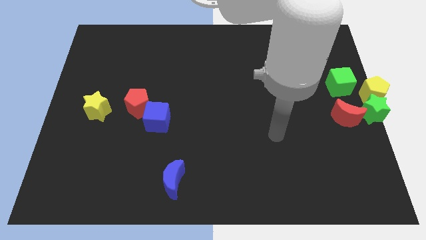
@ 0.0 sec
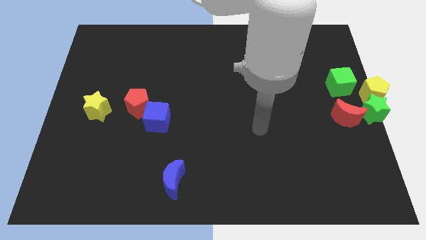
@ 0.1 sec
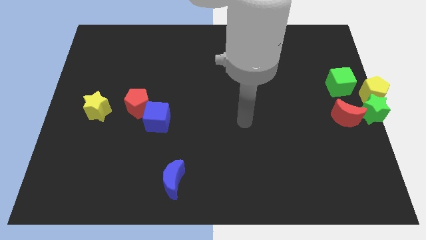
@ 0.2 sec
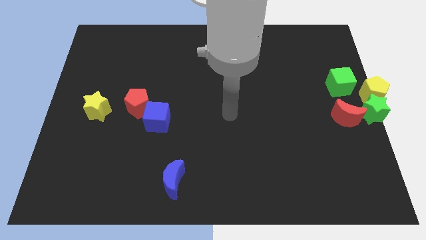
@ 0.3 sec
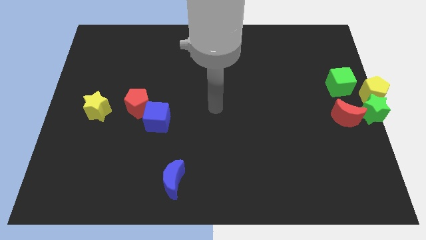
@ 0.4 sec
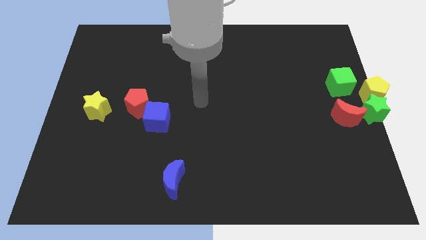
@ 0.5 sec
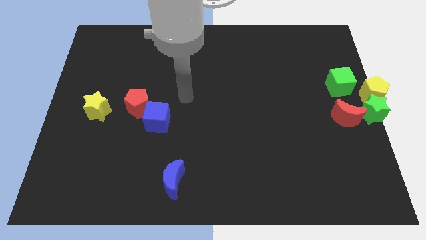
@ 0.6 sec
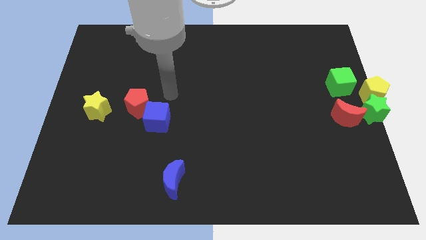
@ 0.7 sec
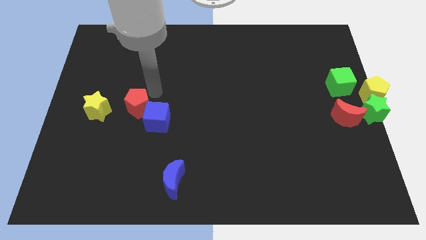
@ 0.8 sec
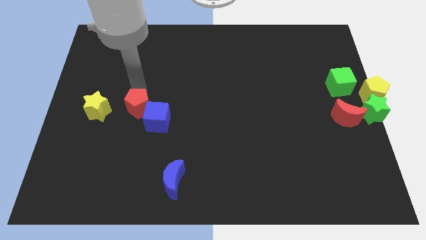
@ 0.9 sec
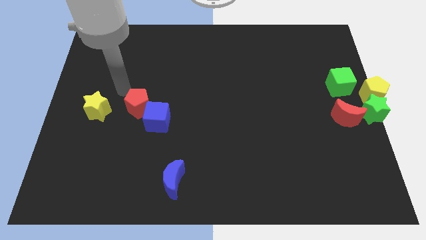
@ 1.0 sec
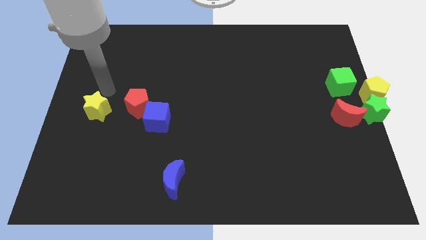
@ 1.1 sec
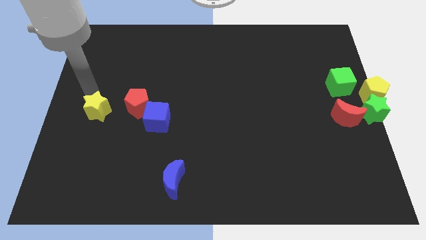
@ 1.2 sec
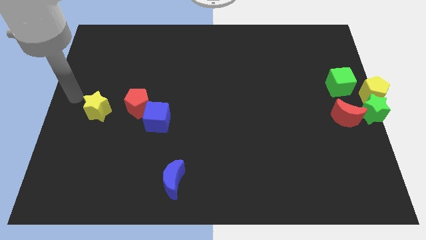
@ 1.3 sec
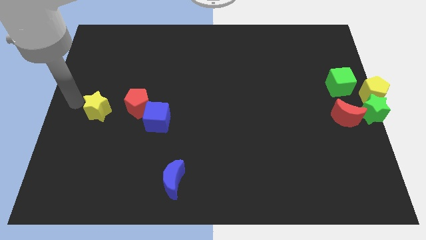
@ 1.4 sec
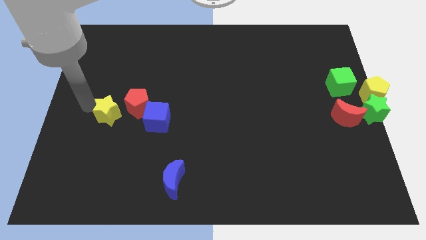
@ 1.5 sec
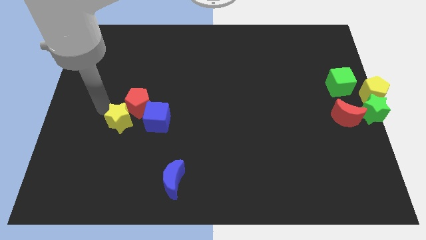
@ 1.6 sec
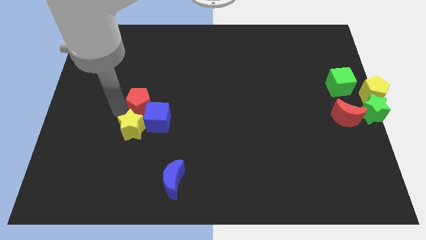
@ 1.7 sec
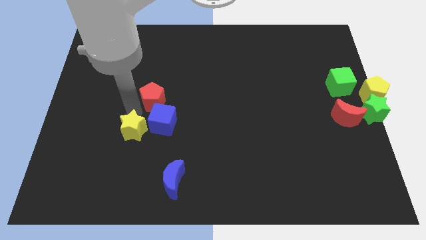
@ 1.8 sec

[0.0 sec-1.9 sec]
place the yellow star below the red pentagon

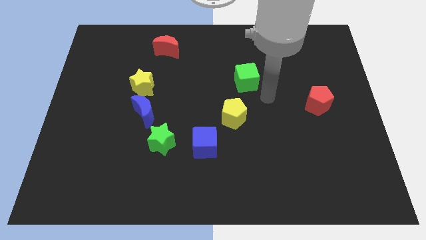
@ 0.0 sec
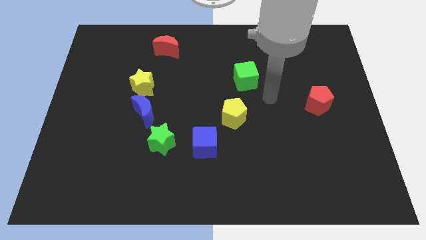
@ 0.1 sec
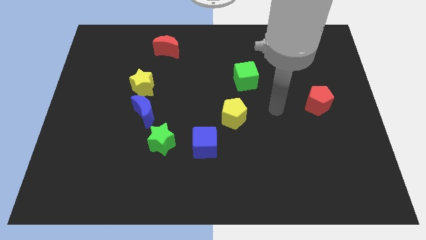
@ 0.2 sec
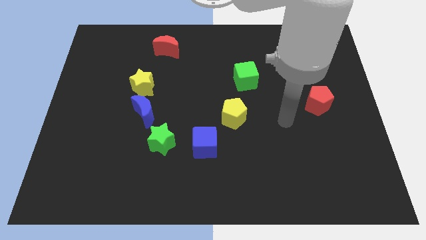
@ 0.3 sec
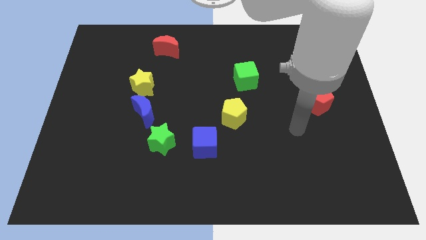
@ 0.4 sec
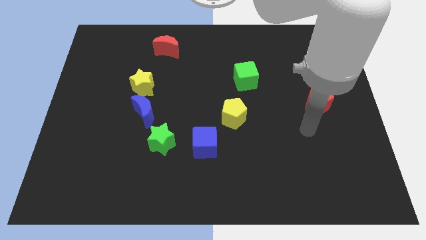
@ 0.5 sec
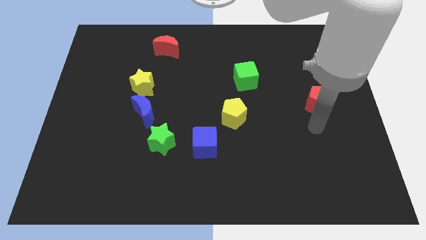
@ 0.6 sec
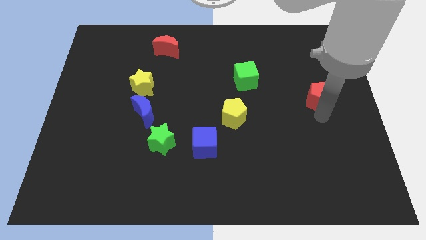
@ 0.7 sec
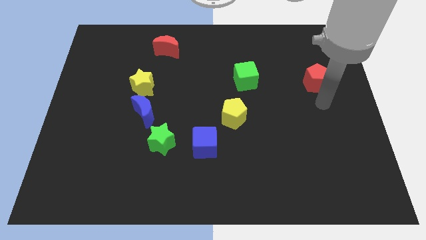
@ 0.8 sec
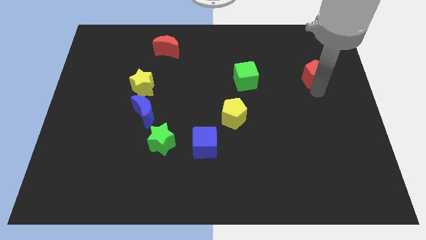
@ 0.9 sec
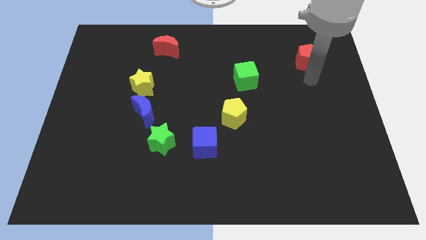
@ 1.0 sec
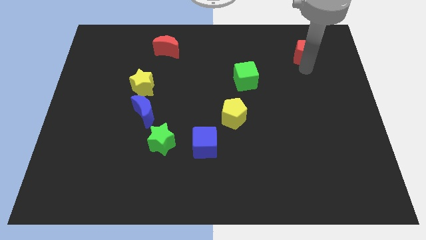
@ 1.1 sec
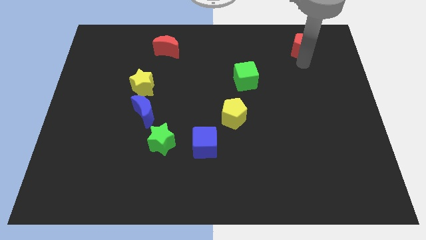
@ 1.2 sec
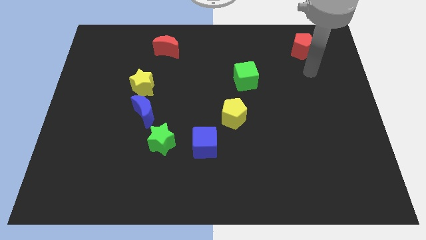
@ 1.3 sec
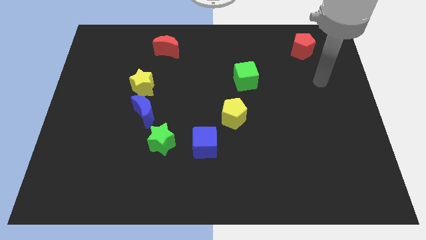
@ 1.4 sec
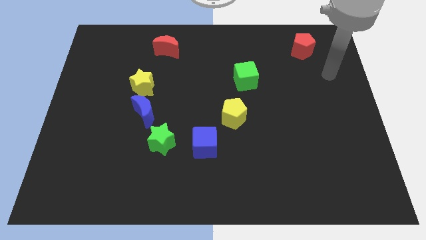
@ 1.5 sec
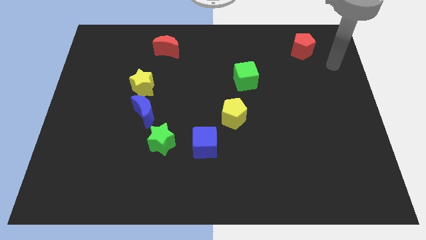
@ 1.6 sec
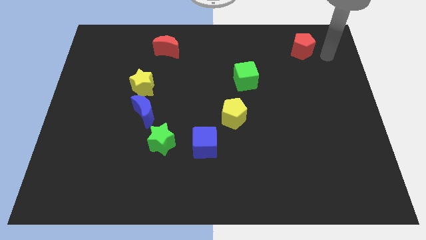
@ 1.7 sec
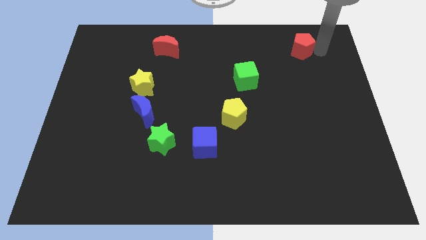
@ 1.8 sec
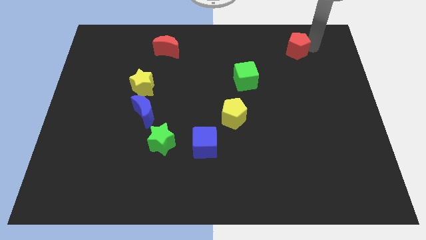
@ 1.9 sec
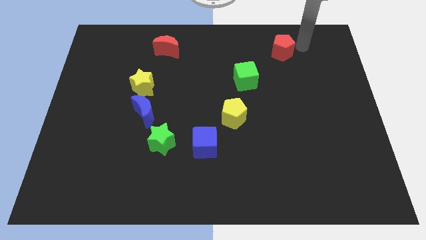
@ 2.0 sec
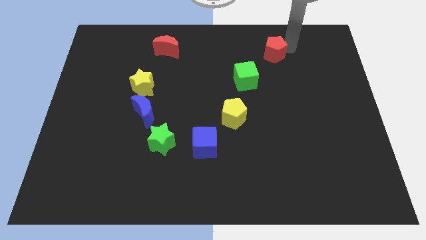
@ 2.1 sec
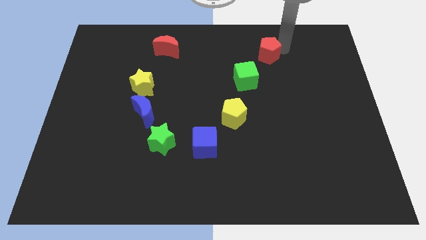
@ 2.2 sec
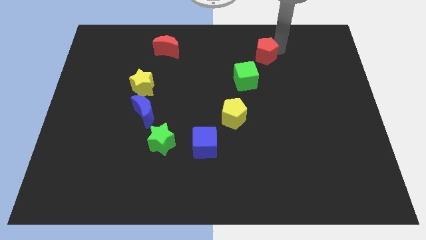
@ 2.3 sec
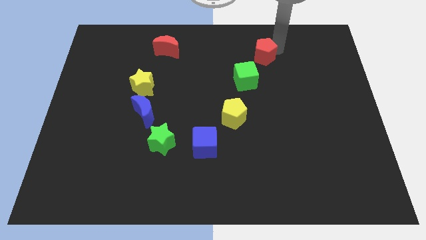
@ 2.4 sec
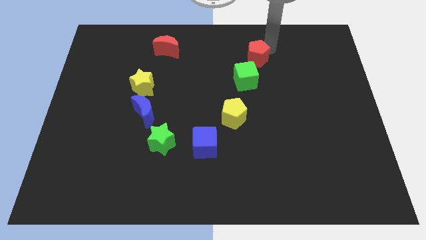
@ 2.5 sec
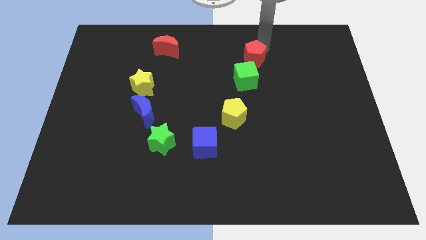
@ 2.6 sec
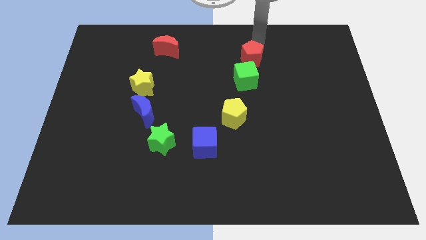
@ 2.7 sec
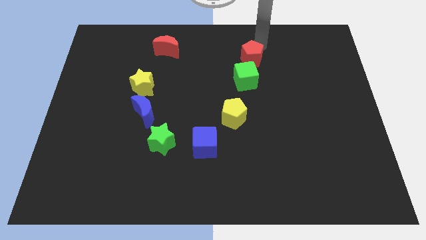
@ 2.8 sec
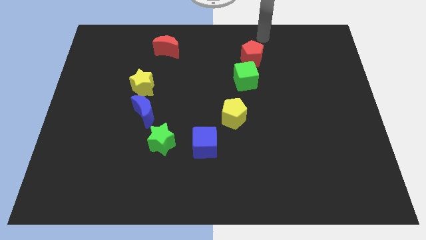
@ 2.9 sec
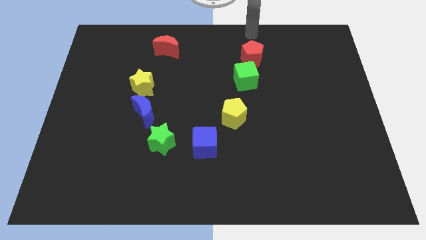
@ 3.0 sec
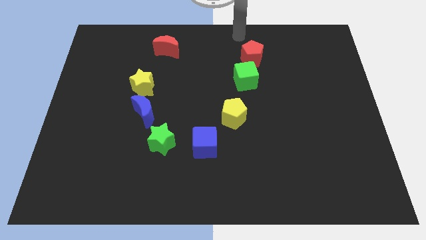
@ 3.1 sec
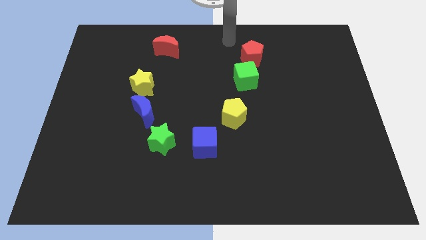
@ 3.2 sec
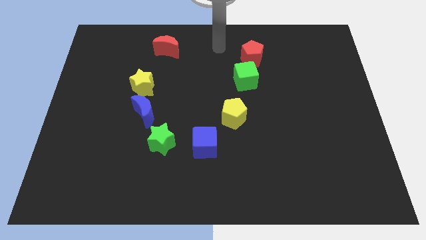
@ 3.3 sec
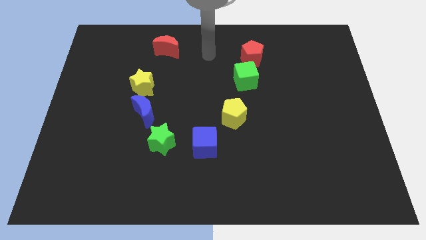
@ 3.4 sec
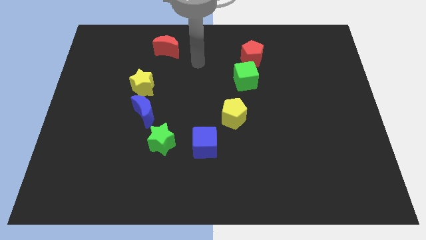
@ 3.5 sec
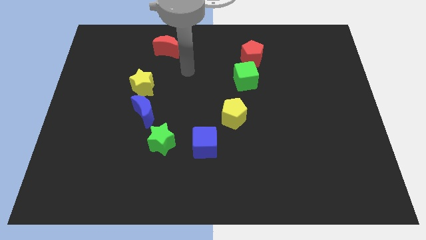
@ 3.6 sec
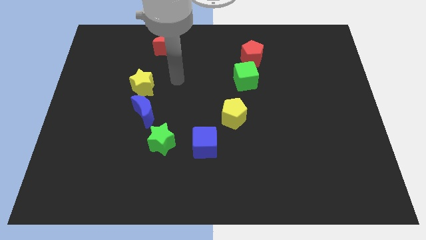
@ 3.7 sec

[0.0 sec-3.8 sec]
move the red pentagon above green cube

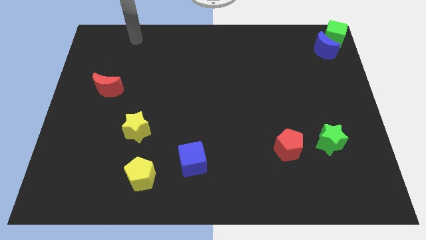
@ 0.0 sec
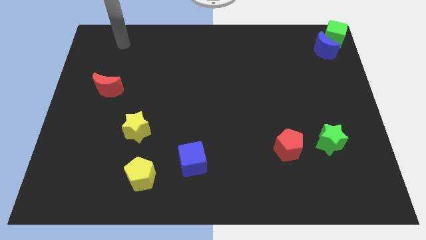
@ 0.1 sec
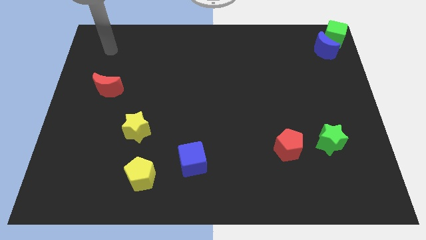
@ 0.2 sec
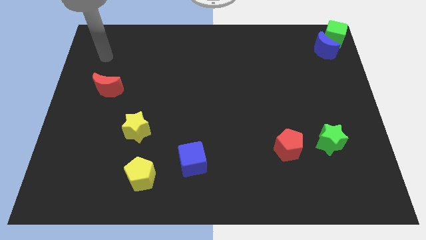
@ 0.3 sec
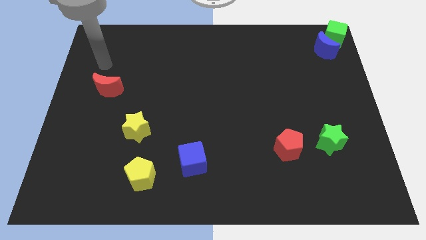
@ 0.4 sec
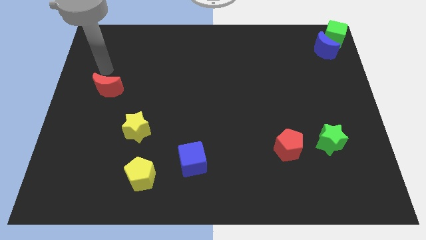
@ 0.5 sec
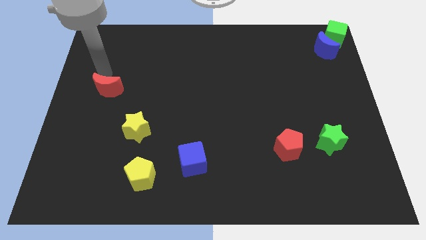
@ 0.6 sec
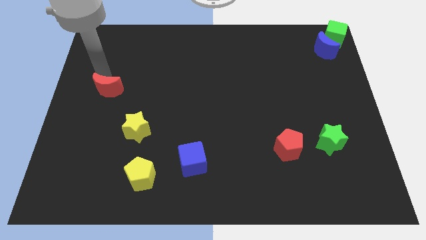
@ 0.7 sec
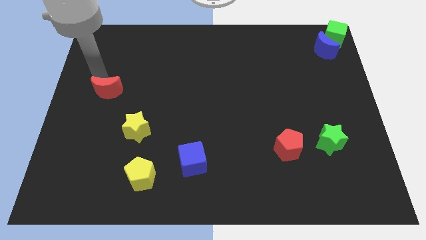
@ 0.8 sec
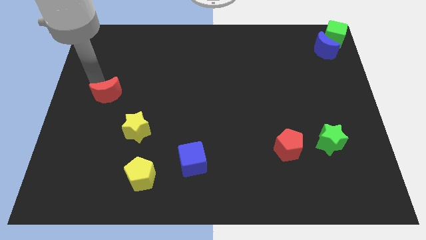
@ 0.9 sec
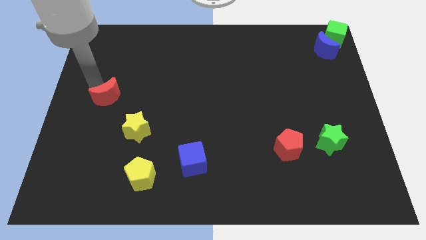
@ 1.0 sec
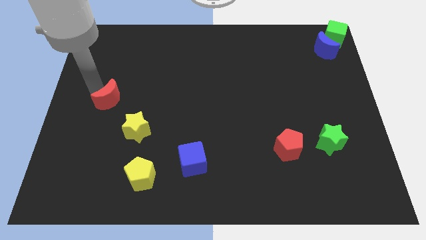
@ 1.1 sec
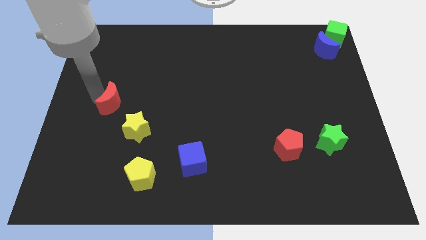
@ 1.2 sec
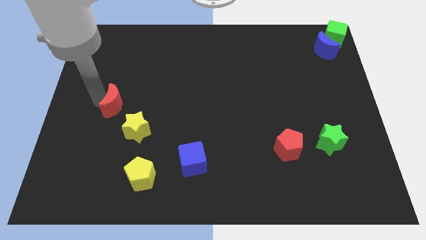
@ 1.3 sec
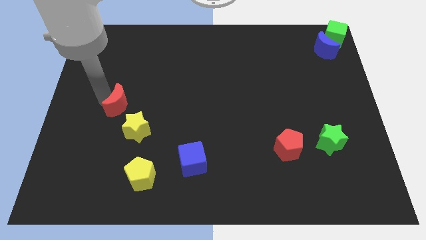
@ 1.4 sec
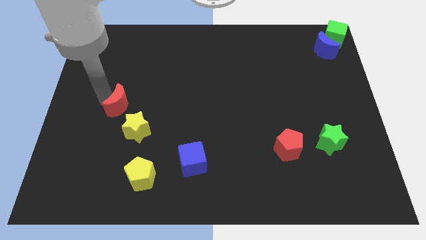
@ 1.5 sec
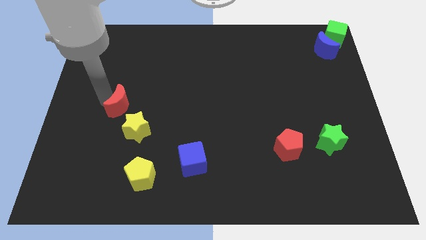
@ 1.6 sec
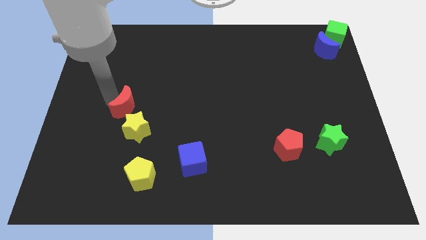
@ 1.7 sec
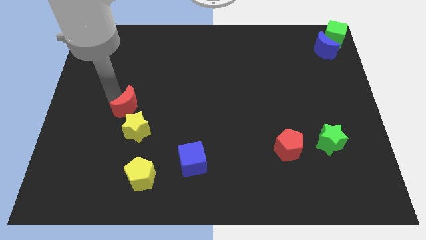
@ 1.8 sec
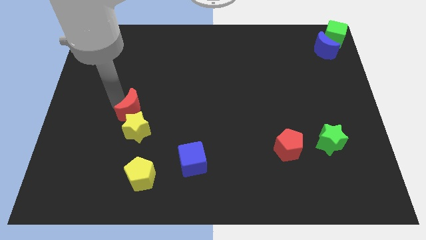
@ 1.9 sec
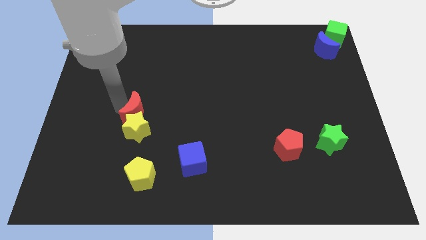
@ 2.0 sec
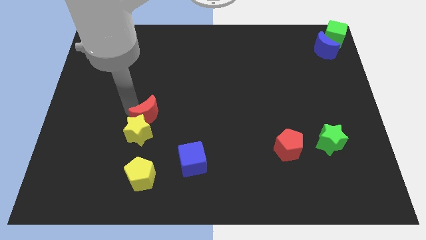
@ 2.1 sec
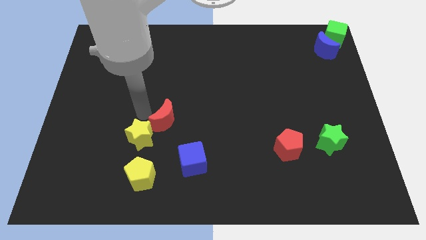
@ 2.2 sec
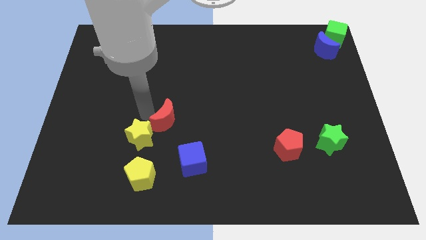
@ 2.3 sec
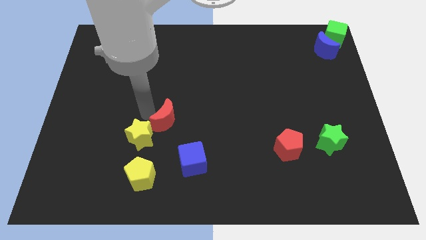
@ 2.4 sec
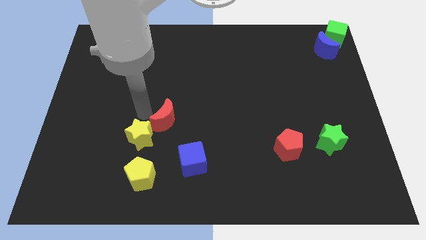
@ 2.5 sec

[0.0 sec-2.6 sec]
move the red moon diagonal above the yellow star

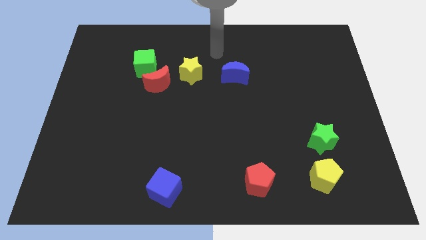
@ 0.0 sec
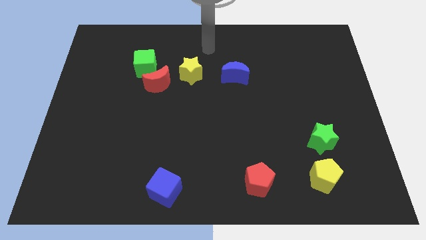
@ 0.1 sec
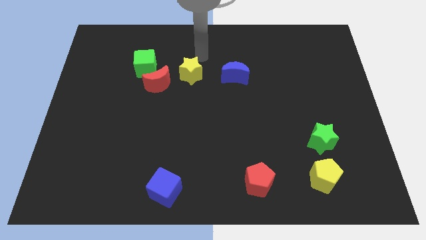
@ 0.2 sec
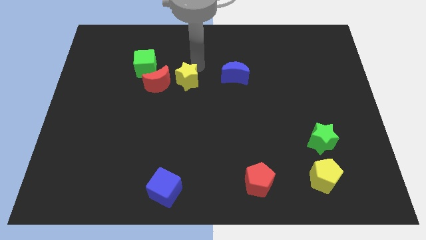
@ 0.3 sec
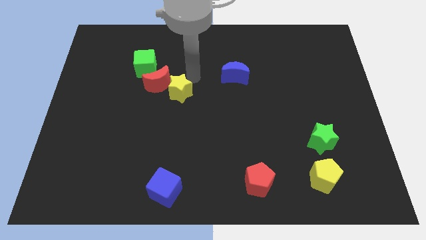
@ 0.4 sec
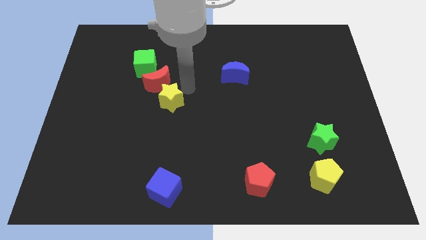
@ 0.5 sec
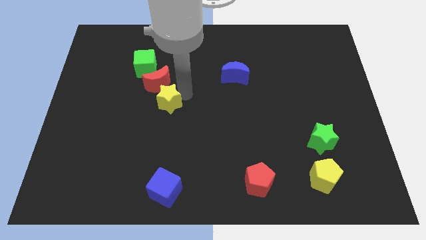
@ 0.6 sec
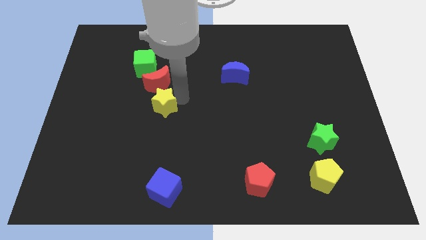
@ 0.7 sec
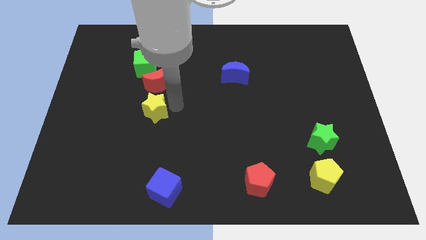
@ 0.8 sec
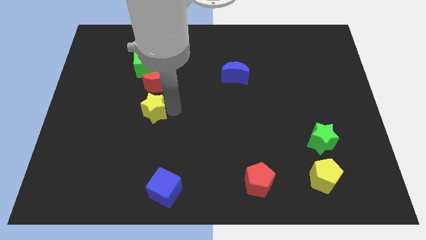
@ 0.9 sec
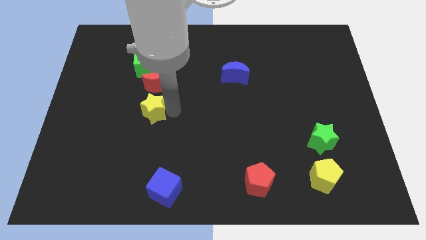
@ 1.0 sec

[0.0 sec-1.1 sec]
move the yellow star diagonally to the bottom of the red moon
